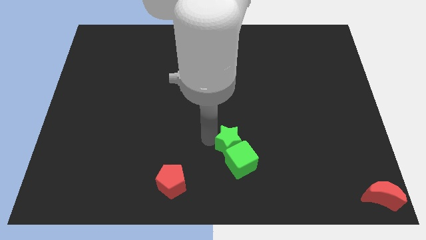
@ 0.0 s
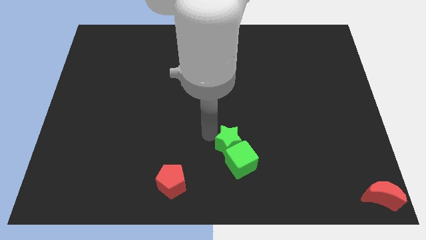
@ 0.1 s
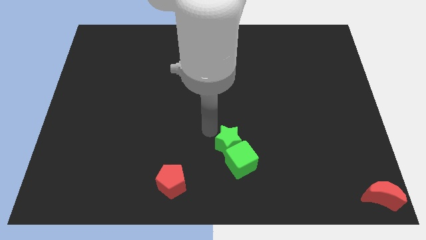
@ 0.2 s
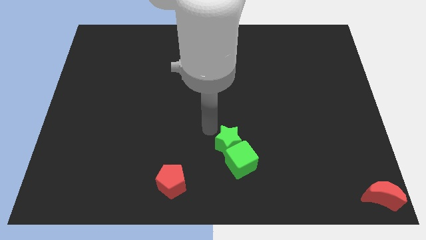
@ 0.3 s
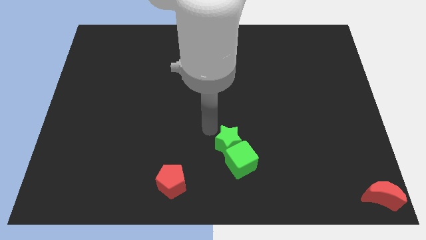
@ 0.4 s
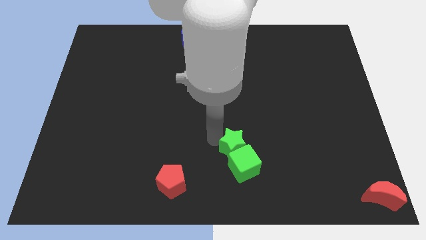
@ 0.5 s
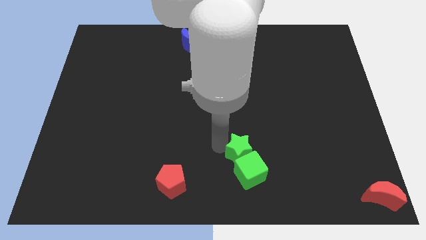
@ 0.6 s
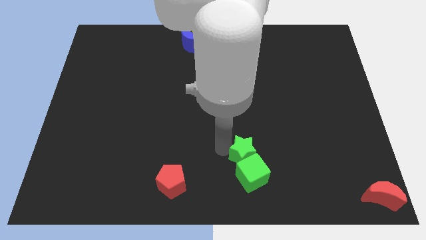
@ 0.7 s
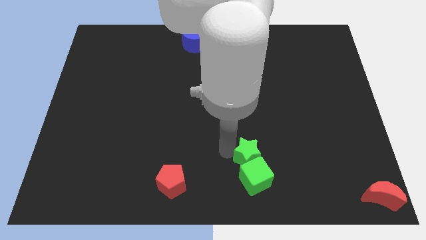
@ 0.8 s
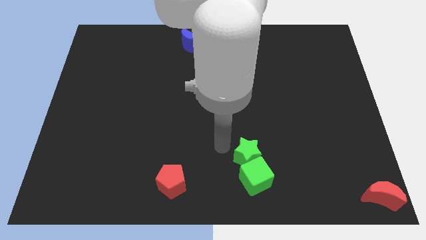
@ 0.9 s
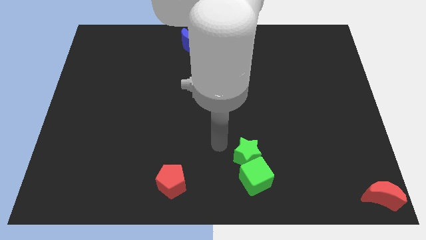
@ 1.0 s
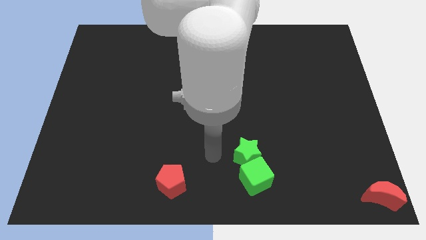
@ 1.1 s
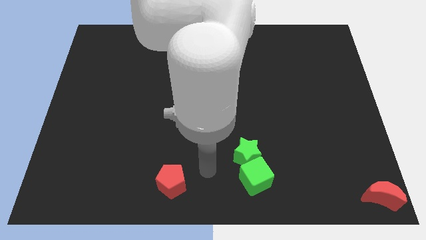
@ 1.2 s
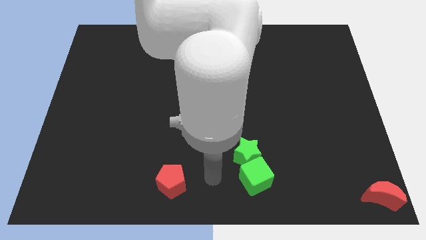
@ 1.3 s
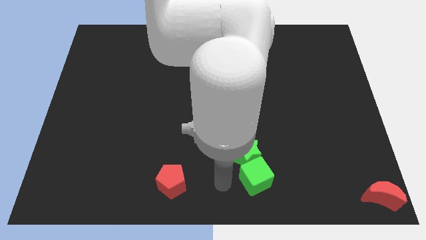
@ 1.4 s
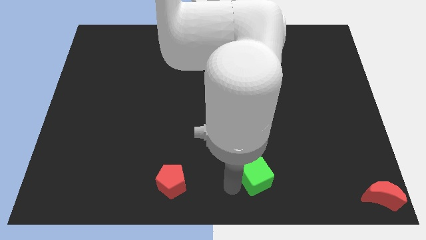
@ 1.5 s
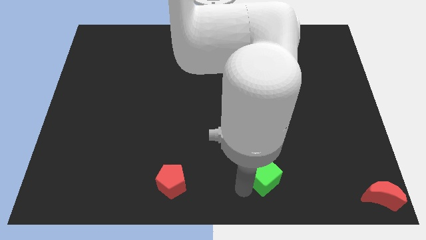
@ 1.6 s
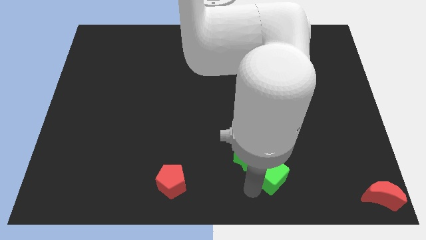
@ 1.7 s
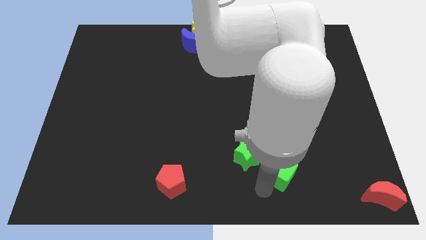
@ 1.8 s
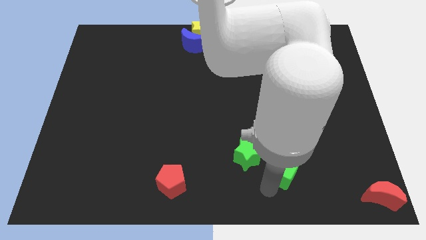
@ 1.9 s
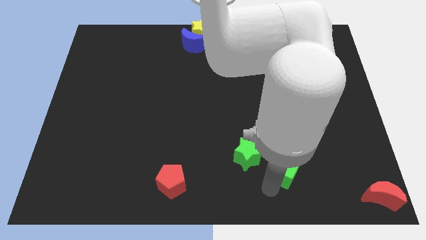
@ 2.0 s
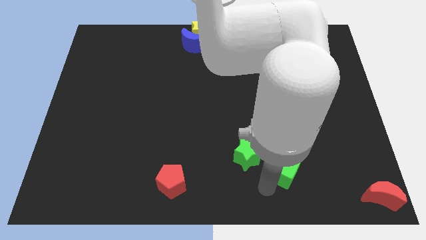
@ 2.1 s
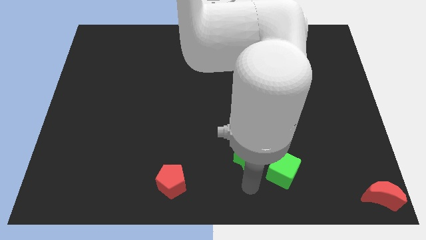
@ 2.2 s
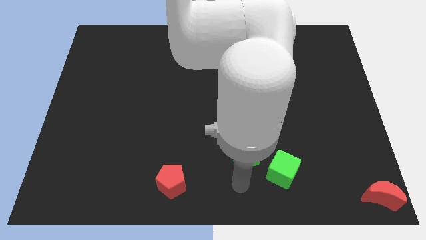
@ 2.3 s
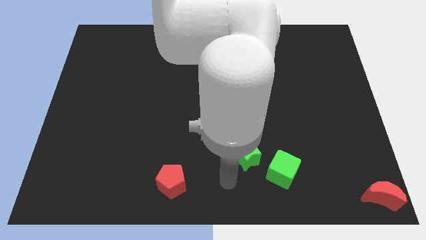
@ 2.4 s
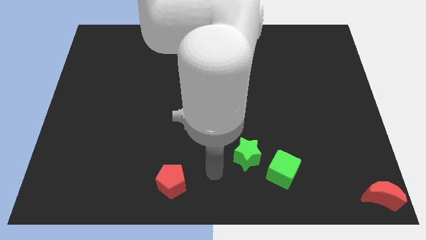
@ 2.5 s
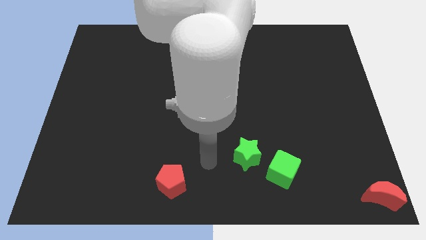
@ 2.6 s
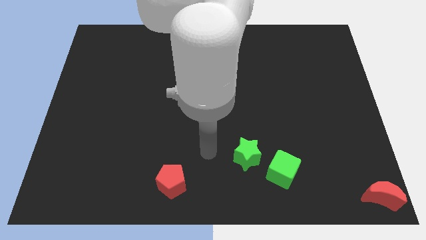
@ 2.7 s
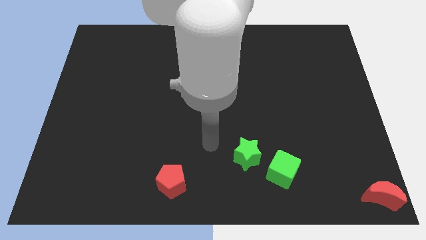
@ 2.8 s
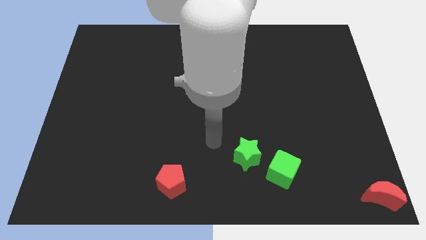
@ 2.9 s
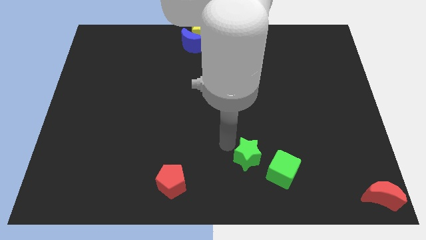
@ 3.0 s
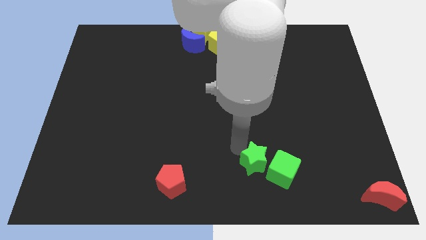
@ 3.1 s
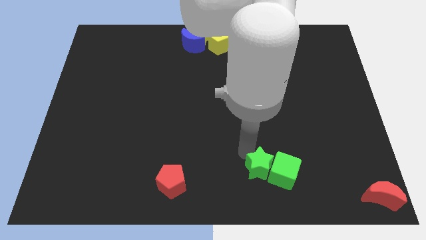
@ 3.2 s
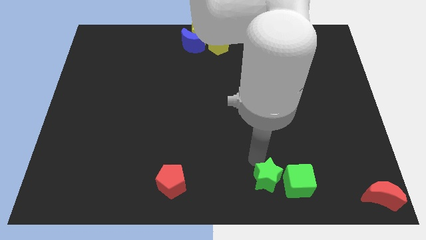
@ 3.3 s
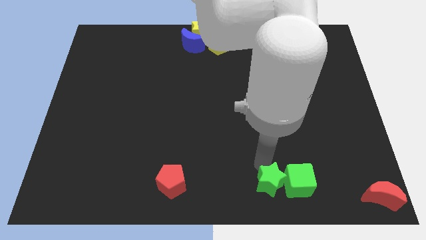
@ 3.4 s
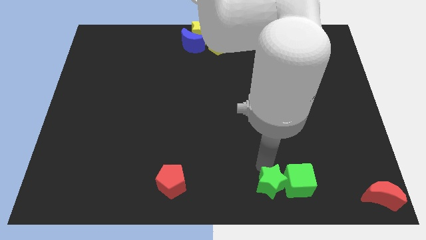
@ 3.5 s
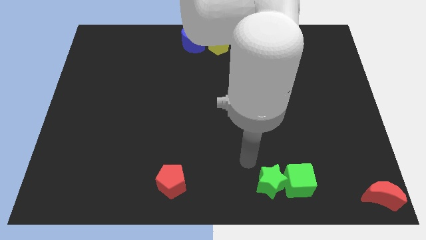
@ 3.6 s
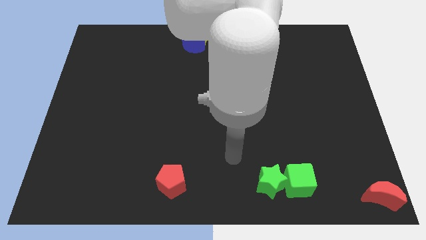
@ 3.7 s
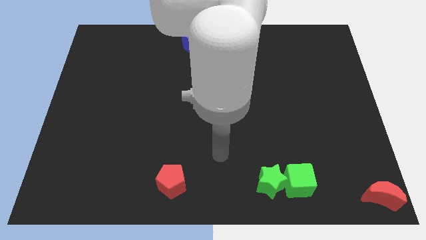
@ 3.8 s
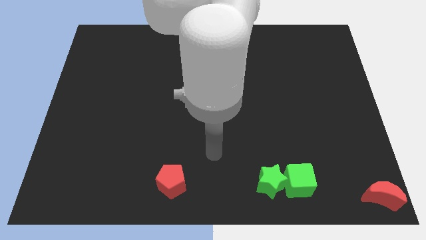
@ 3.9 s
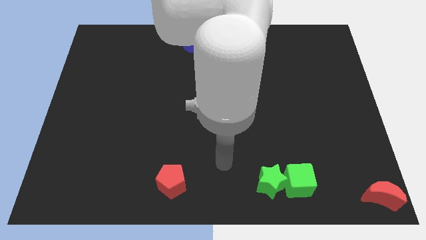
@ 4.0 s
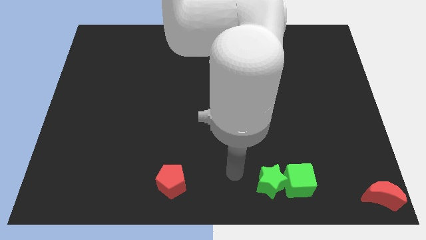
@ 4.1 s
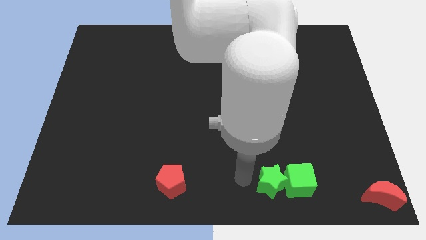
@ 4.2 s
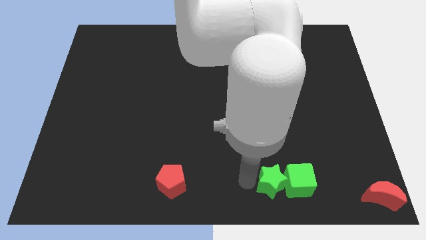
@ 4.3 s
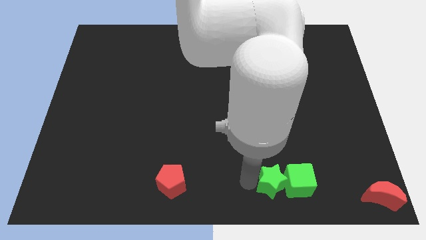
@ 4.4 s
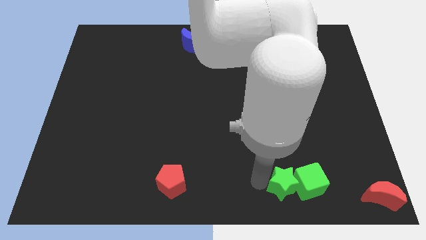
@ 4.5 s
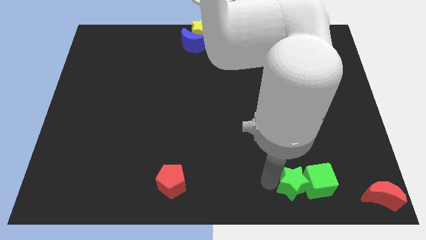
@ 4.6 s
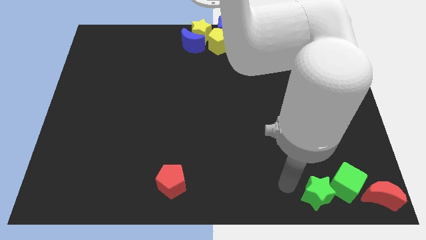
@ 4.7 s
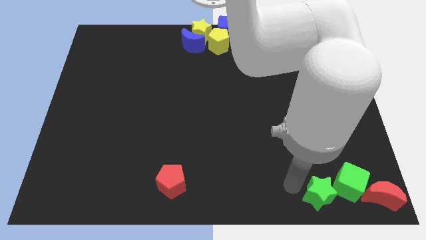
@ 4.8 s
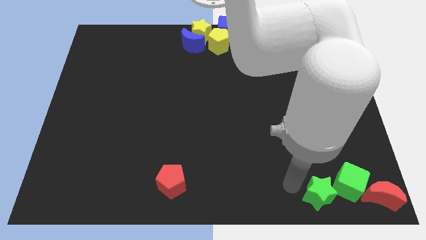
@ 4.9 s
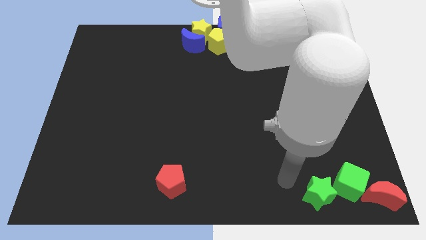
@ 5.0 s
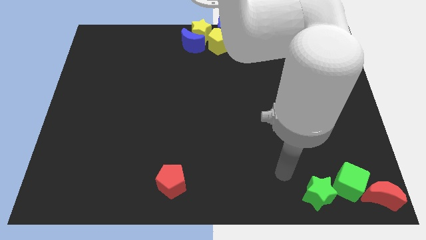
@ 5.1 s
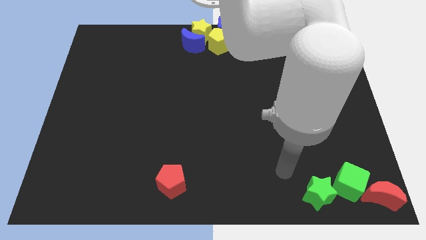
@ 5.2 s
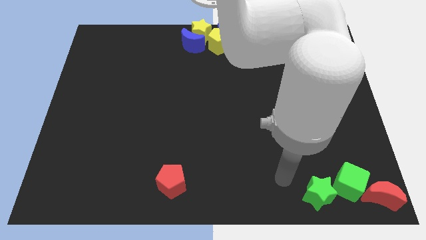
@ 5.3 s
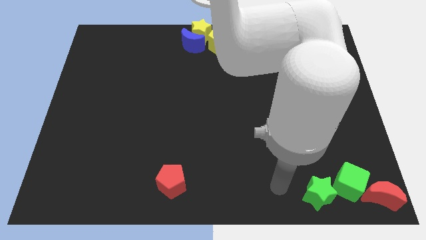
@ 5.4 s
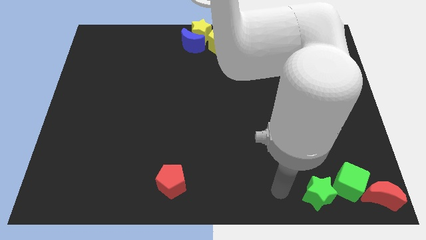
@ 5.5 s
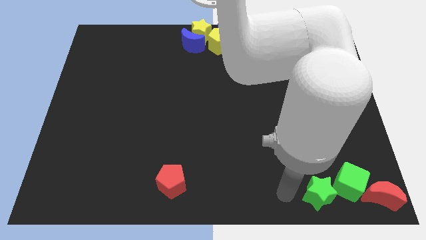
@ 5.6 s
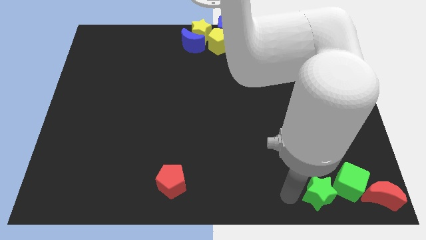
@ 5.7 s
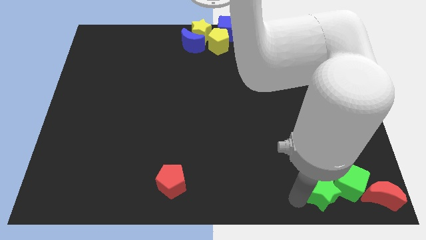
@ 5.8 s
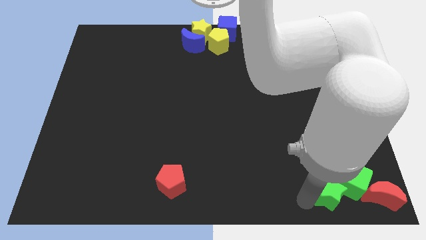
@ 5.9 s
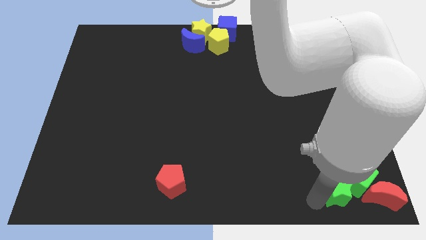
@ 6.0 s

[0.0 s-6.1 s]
push the both green blocks into the red crescent

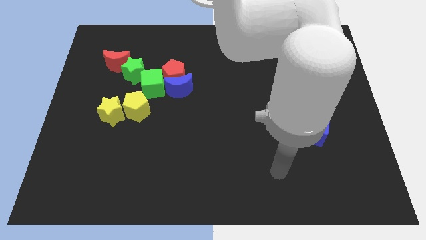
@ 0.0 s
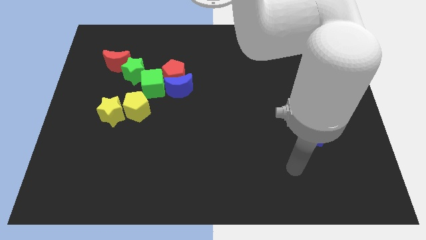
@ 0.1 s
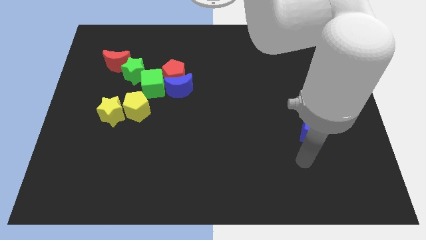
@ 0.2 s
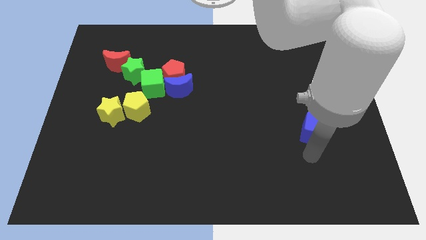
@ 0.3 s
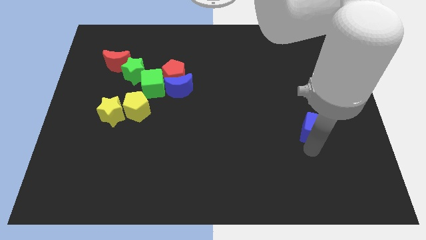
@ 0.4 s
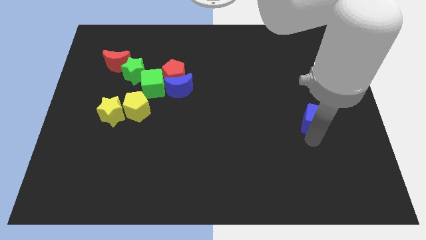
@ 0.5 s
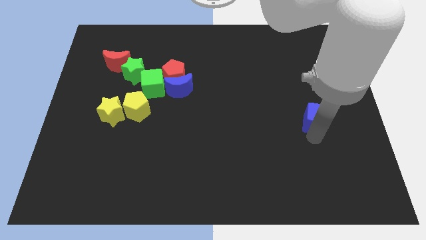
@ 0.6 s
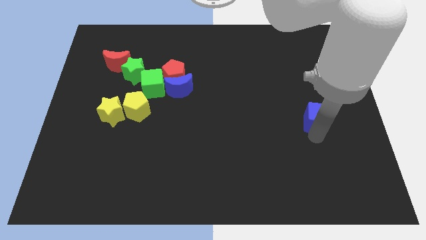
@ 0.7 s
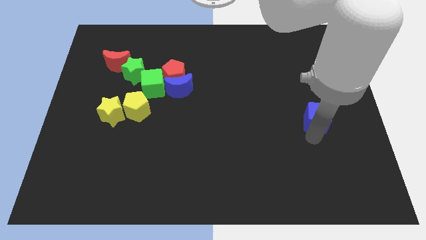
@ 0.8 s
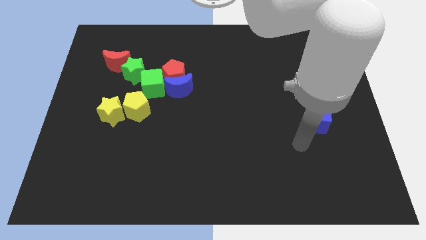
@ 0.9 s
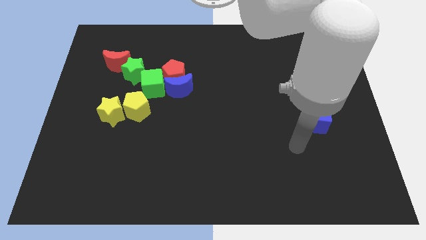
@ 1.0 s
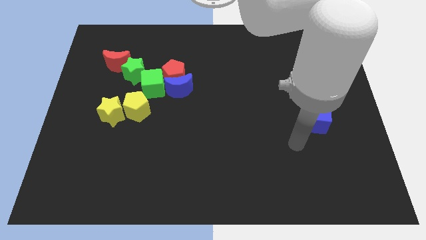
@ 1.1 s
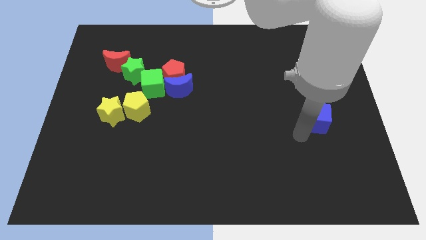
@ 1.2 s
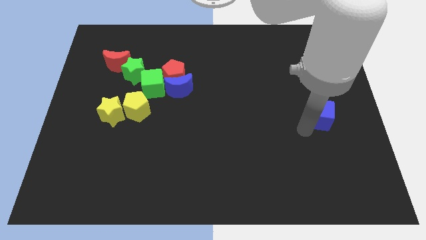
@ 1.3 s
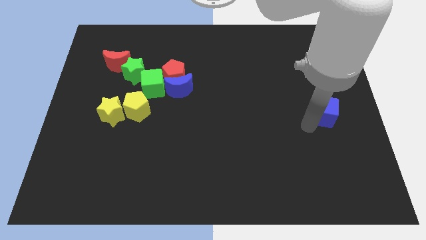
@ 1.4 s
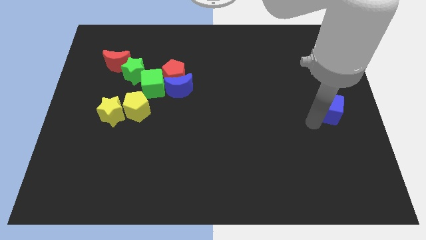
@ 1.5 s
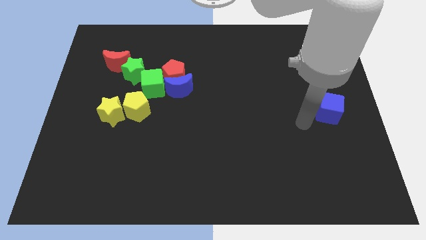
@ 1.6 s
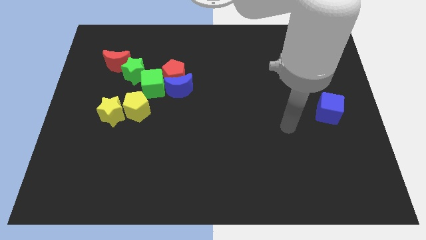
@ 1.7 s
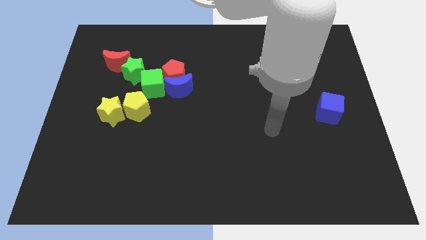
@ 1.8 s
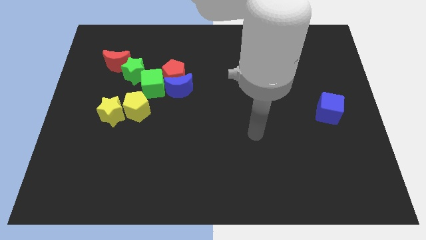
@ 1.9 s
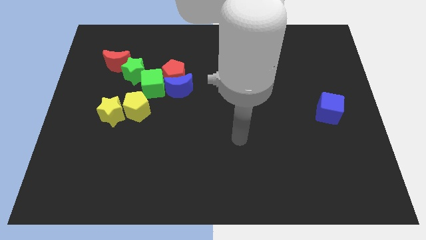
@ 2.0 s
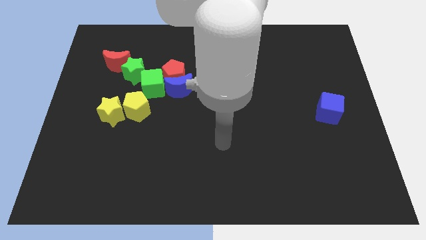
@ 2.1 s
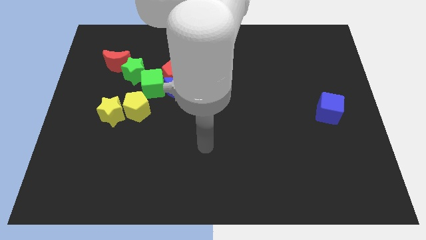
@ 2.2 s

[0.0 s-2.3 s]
move blue cube to center right

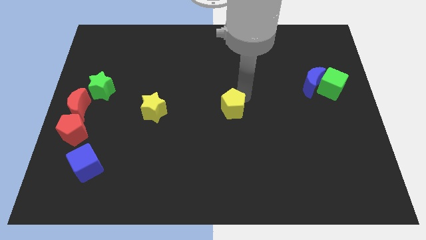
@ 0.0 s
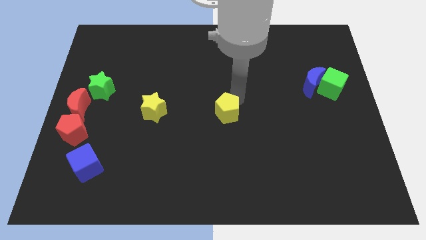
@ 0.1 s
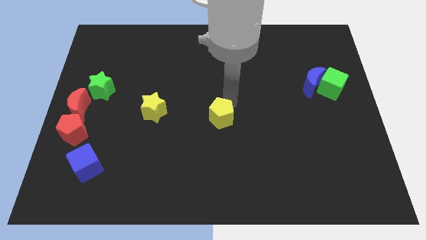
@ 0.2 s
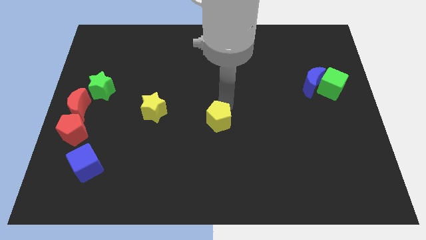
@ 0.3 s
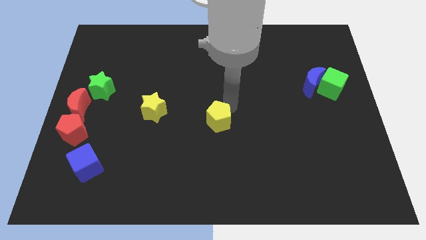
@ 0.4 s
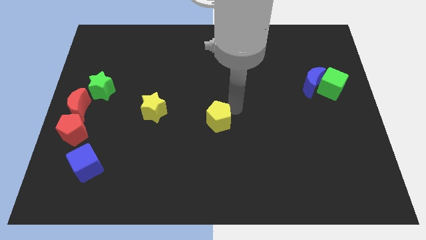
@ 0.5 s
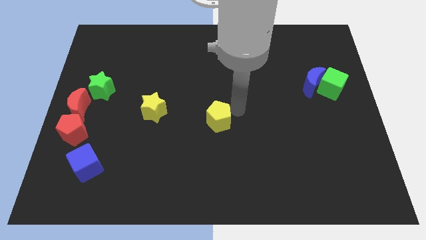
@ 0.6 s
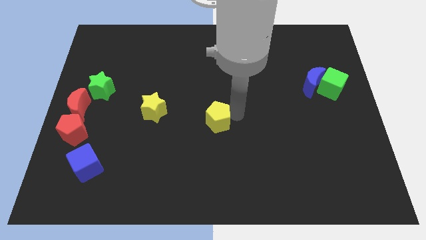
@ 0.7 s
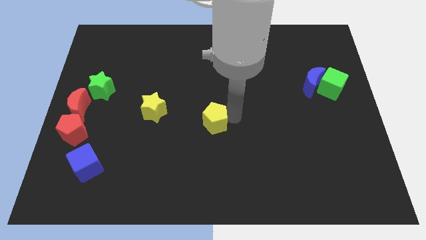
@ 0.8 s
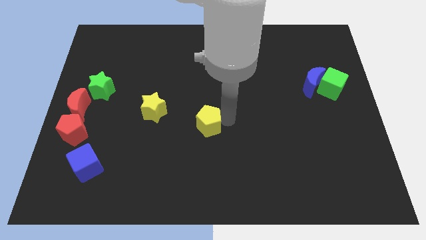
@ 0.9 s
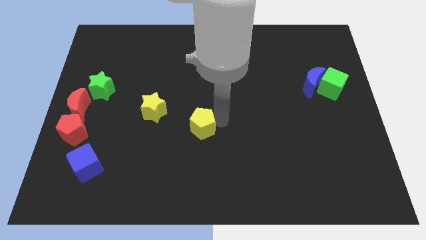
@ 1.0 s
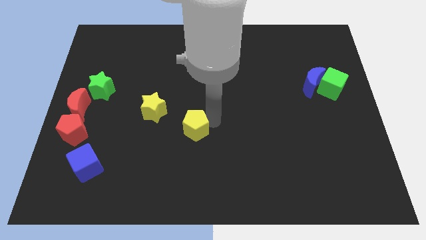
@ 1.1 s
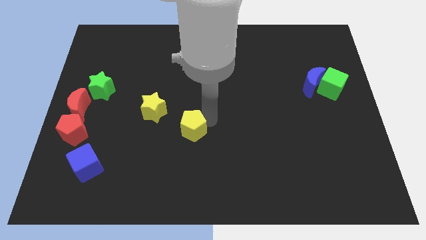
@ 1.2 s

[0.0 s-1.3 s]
place the yellow pentagon at the center of the board
